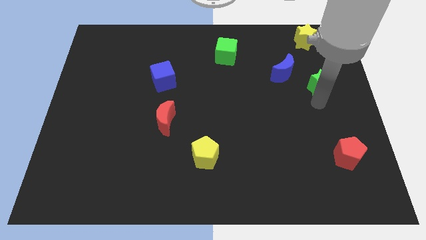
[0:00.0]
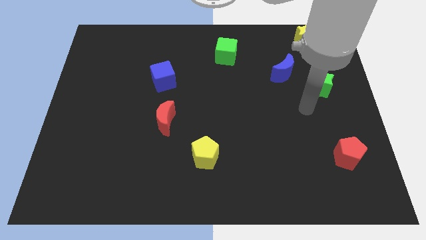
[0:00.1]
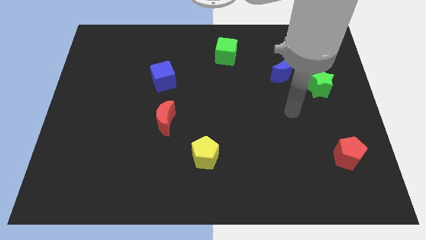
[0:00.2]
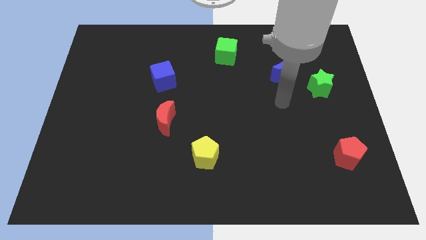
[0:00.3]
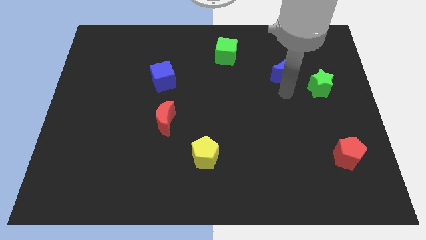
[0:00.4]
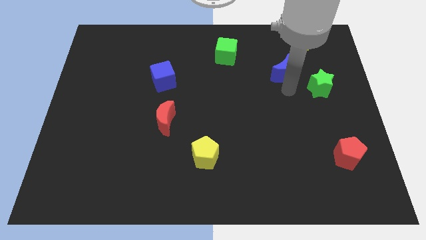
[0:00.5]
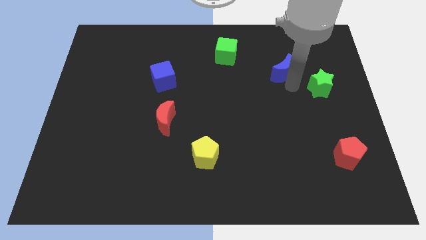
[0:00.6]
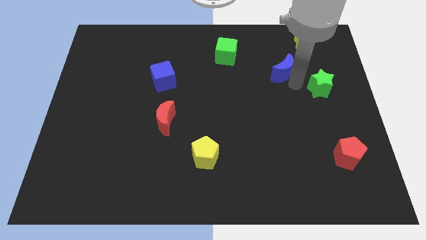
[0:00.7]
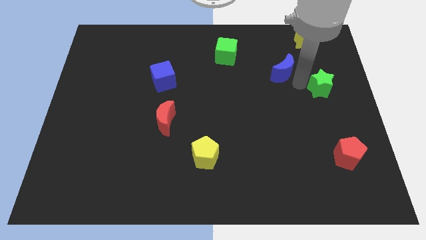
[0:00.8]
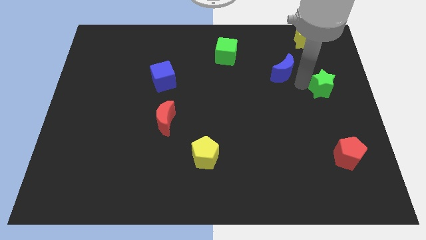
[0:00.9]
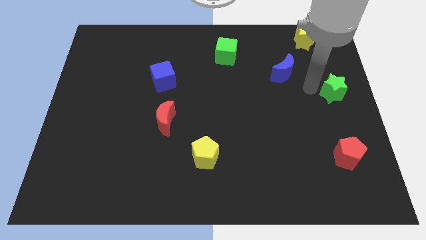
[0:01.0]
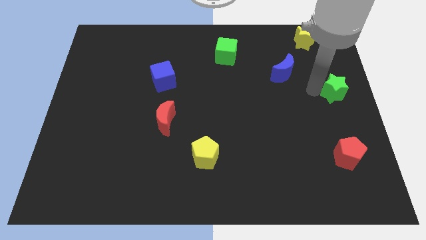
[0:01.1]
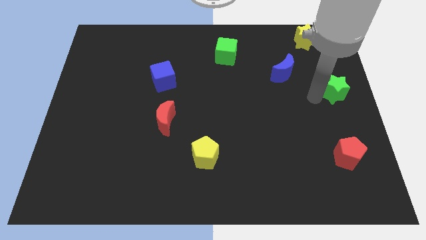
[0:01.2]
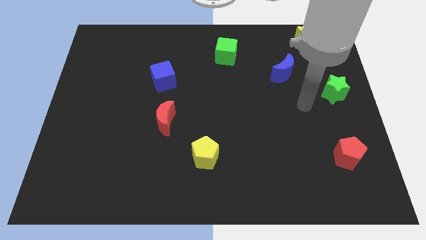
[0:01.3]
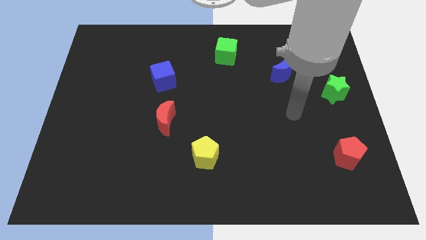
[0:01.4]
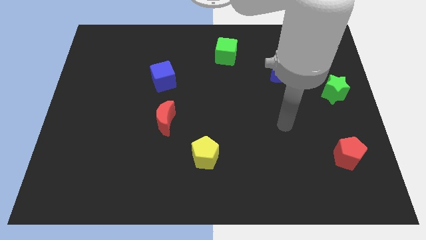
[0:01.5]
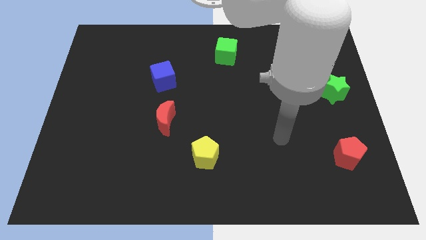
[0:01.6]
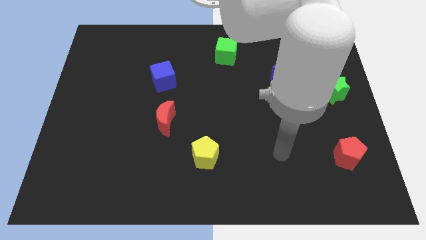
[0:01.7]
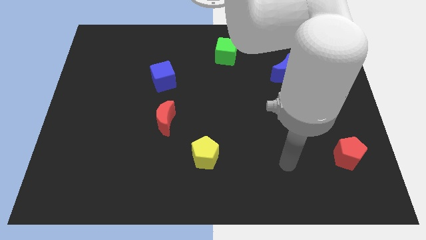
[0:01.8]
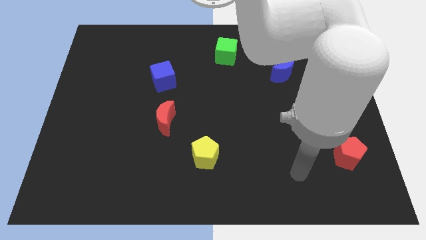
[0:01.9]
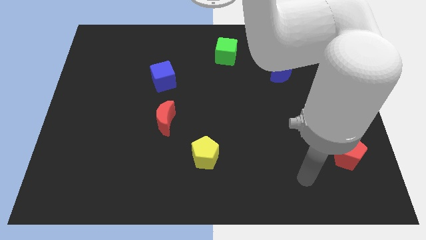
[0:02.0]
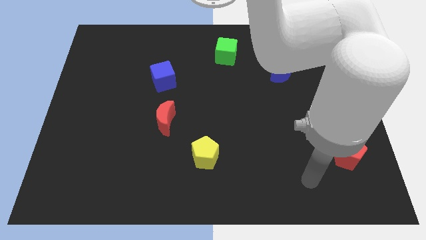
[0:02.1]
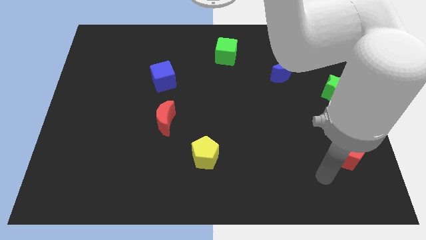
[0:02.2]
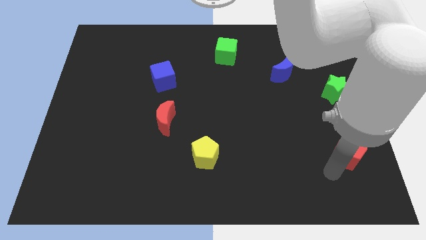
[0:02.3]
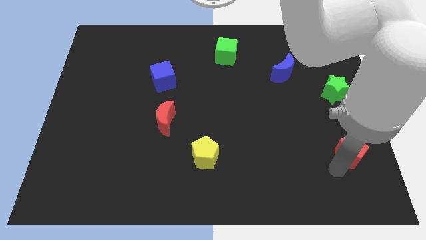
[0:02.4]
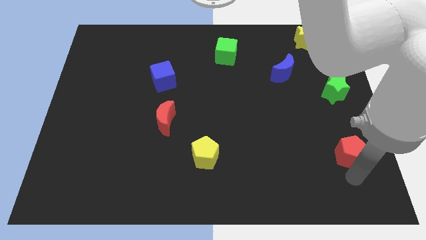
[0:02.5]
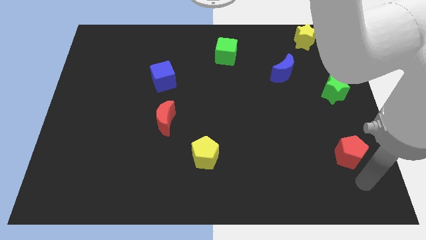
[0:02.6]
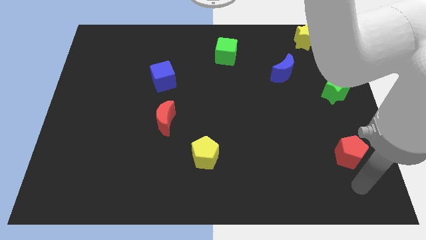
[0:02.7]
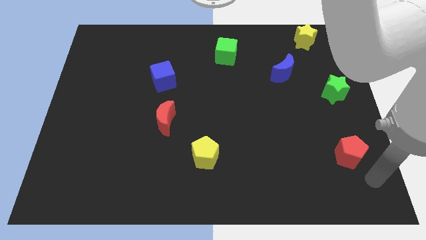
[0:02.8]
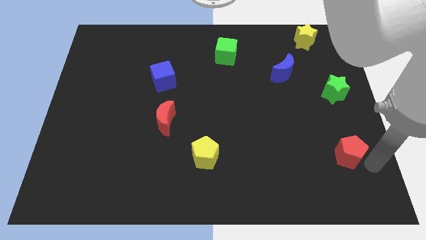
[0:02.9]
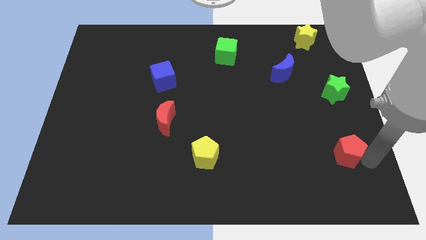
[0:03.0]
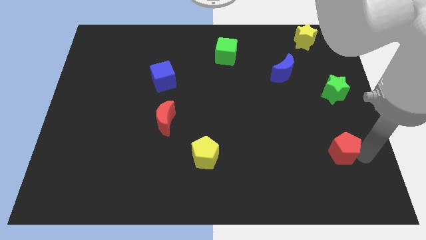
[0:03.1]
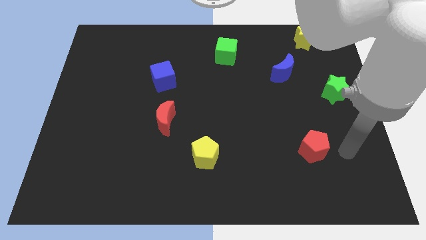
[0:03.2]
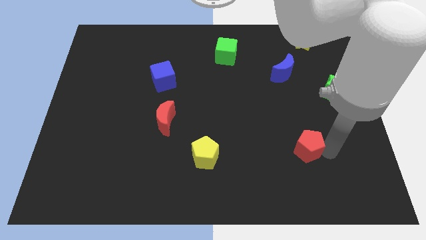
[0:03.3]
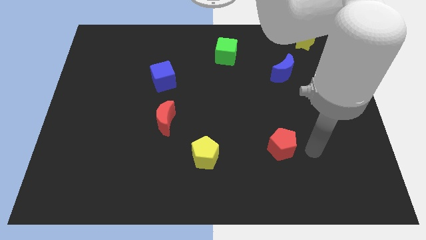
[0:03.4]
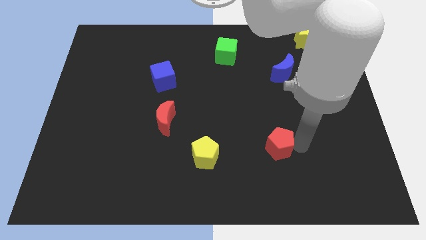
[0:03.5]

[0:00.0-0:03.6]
slide the red pentagon towards the yellow pentagon

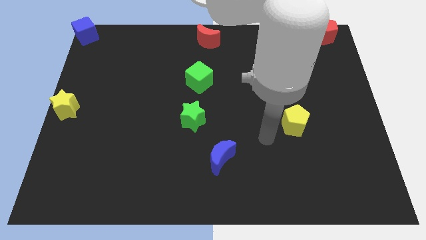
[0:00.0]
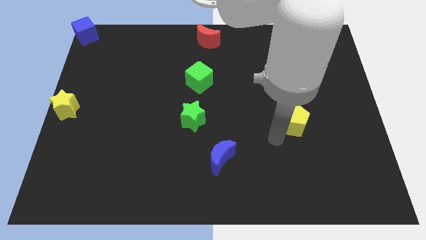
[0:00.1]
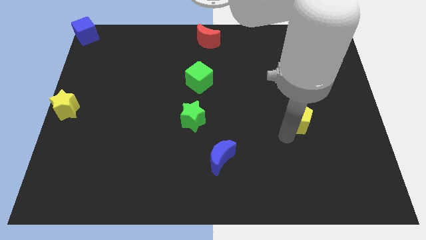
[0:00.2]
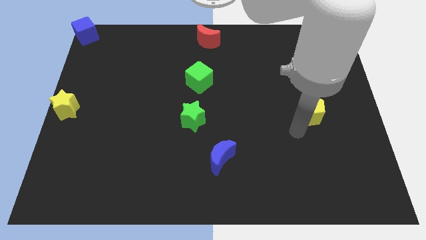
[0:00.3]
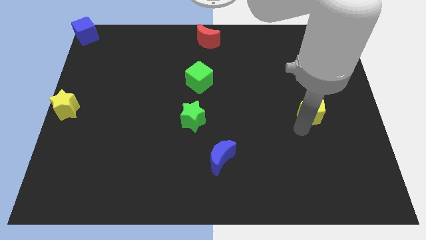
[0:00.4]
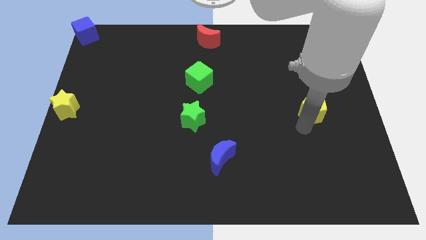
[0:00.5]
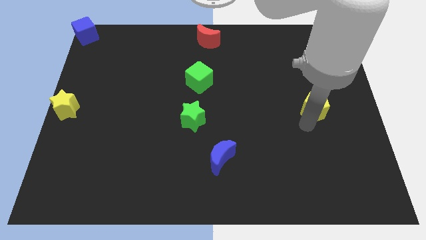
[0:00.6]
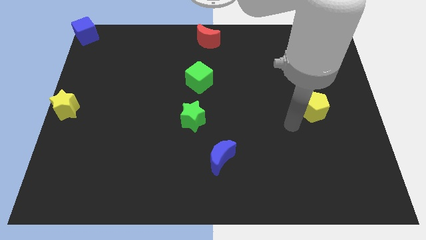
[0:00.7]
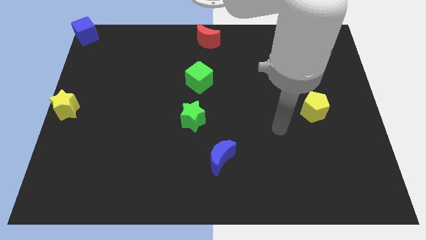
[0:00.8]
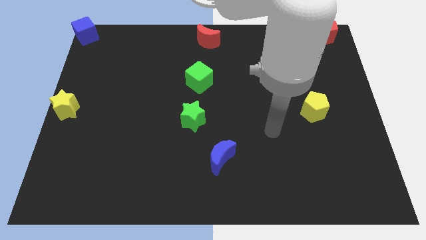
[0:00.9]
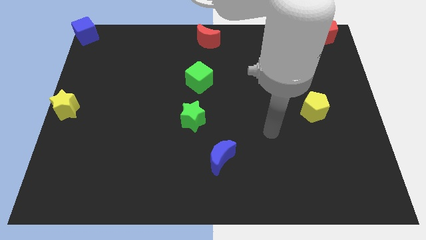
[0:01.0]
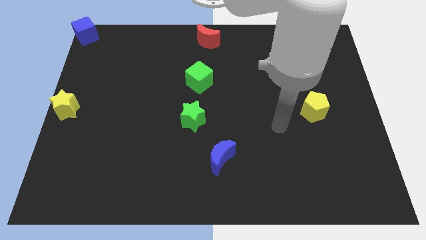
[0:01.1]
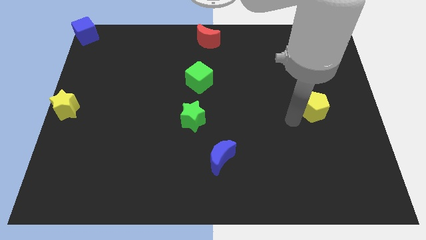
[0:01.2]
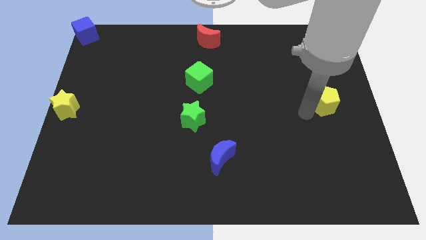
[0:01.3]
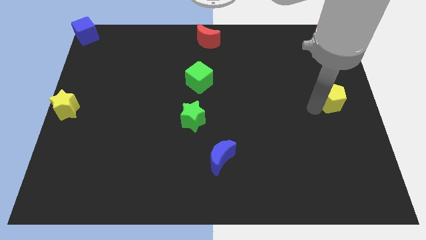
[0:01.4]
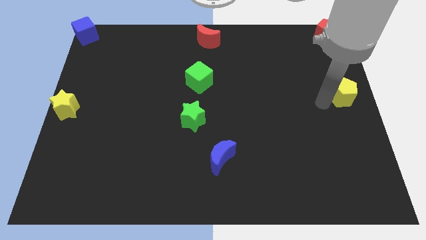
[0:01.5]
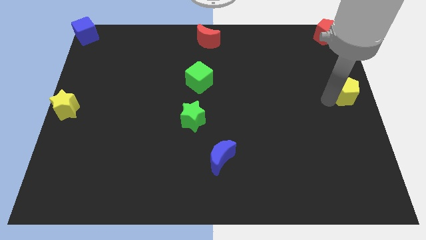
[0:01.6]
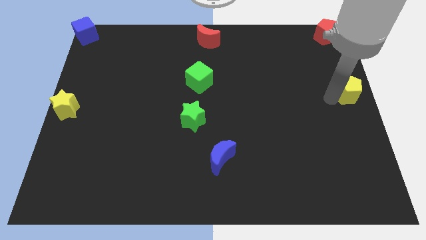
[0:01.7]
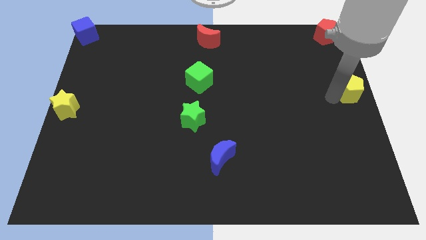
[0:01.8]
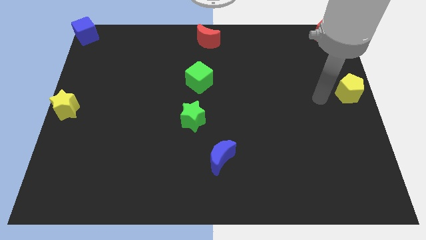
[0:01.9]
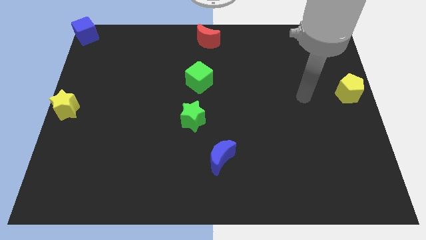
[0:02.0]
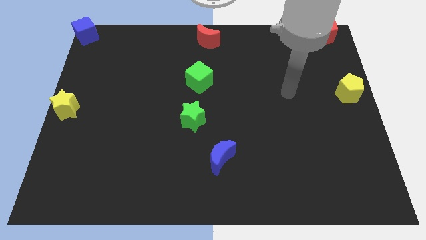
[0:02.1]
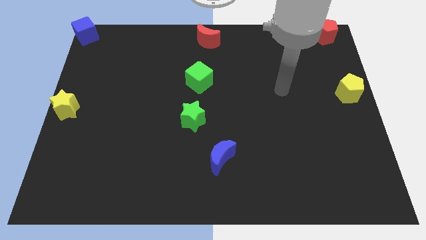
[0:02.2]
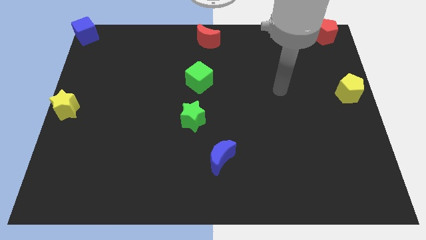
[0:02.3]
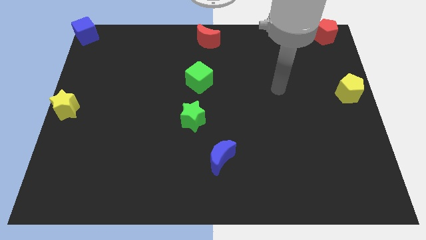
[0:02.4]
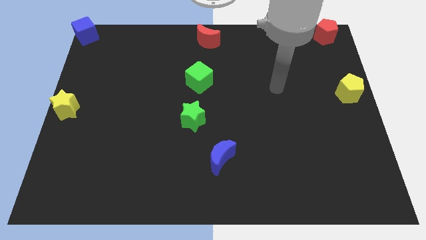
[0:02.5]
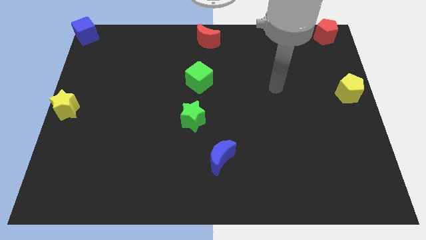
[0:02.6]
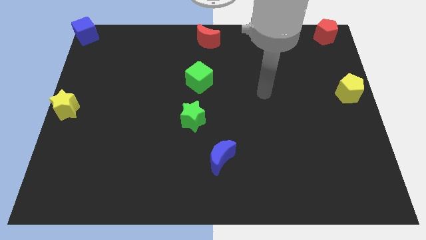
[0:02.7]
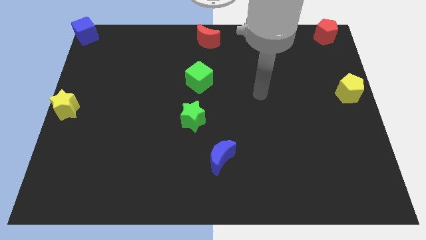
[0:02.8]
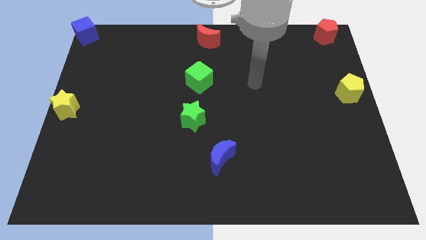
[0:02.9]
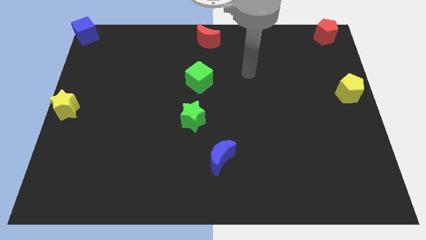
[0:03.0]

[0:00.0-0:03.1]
put the yellow pentagon vertically at the bottom side of the red pentagon

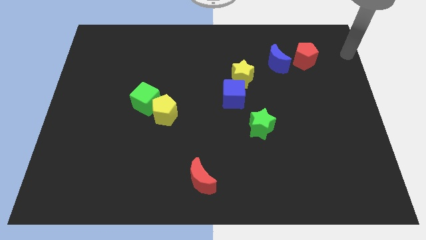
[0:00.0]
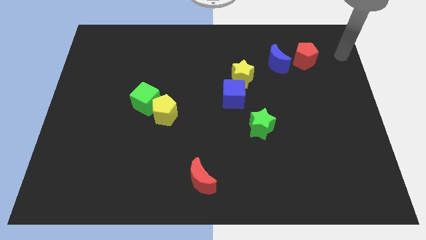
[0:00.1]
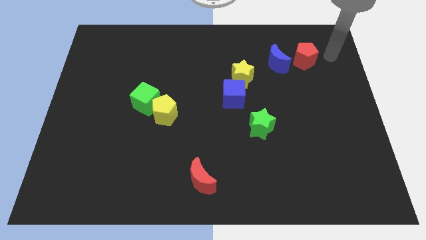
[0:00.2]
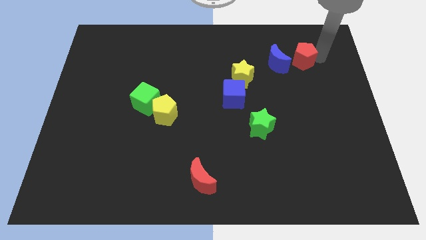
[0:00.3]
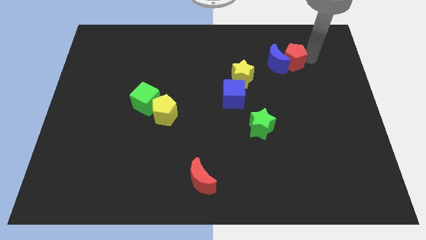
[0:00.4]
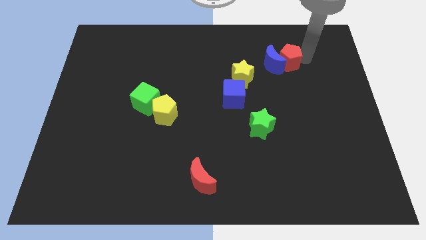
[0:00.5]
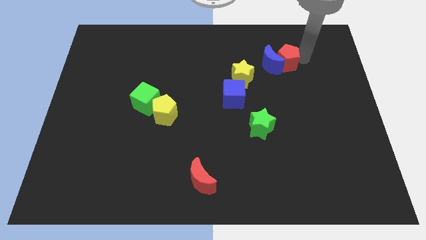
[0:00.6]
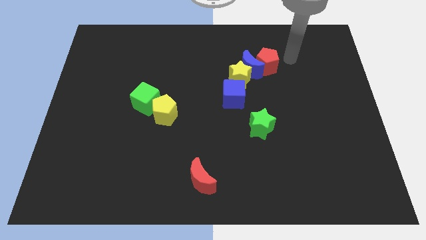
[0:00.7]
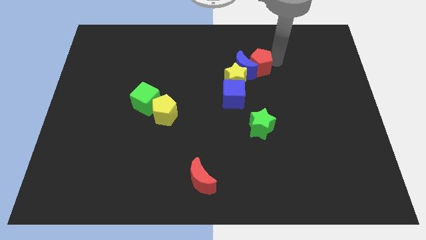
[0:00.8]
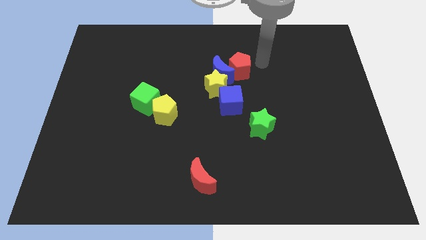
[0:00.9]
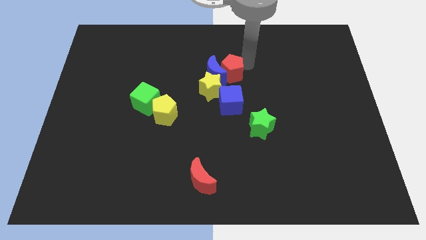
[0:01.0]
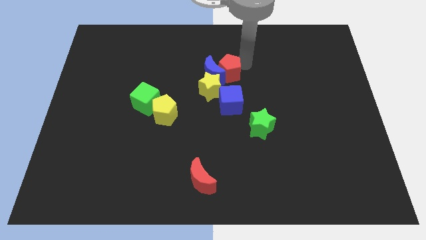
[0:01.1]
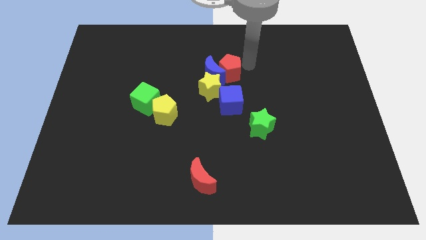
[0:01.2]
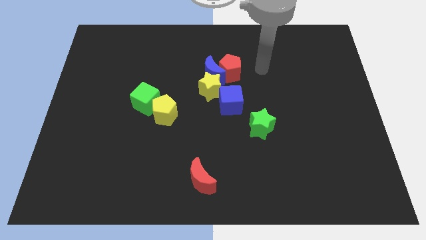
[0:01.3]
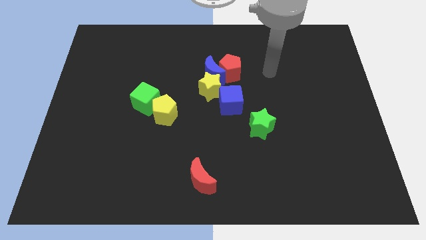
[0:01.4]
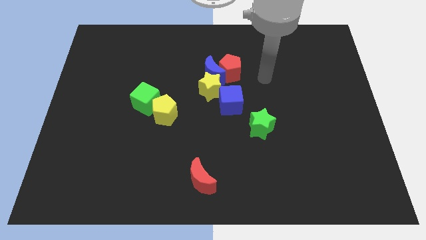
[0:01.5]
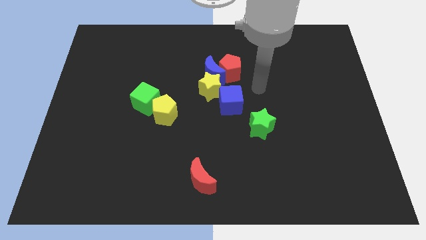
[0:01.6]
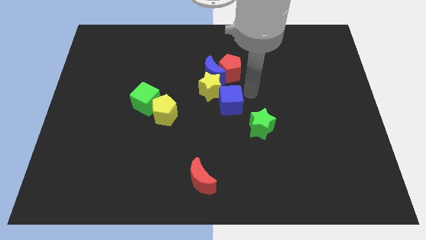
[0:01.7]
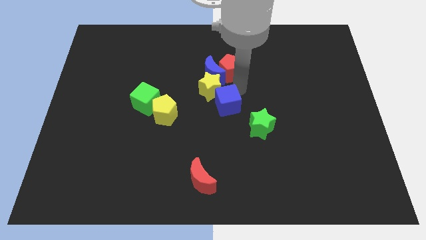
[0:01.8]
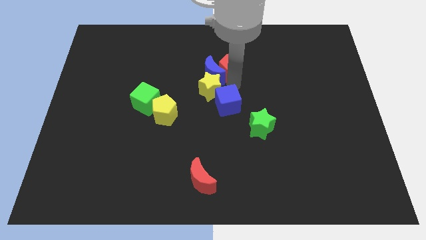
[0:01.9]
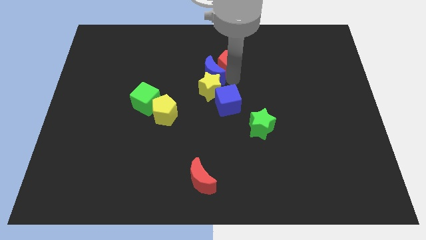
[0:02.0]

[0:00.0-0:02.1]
push red pentagon slightly forward
